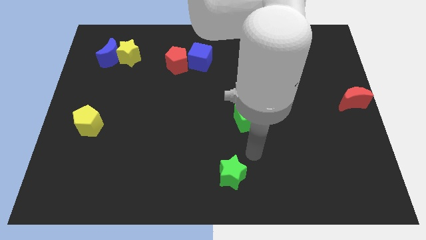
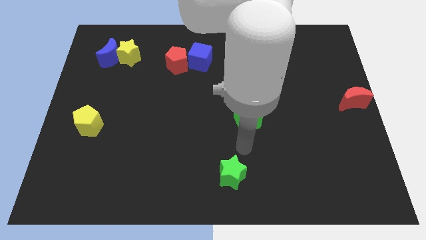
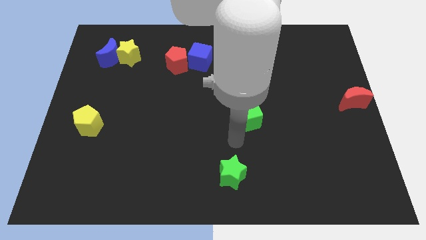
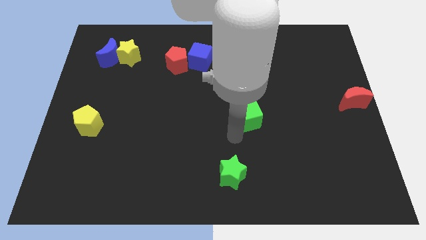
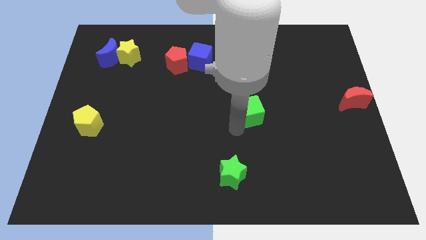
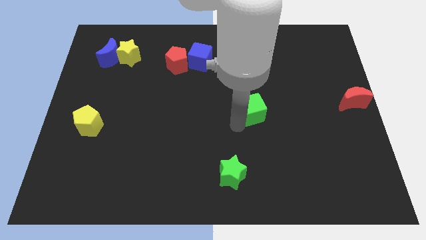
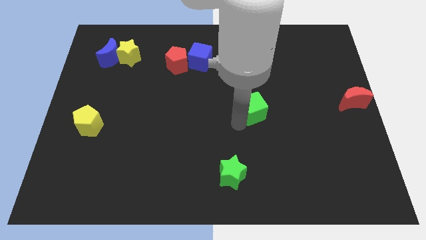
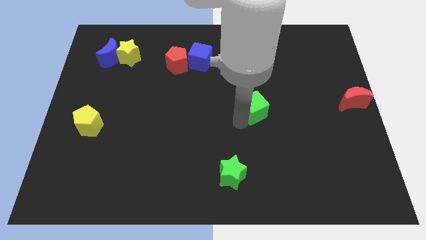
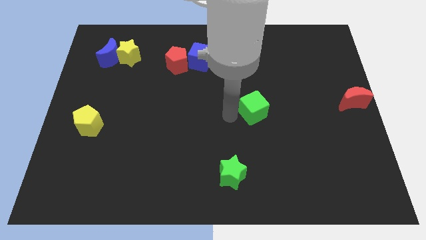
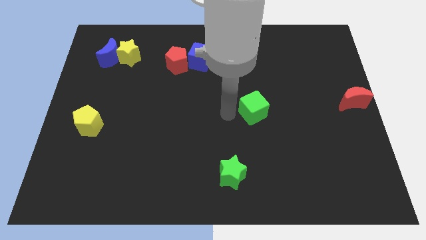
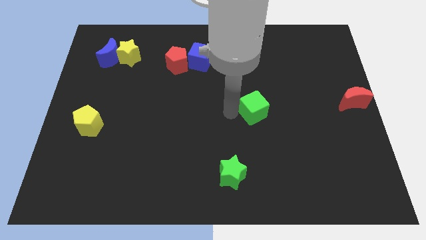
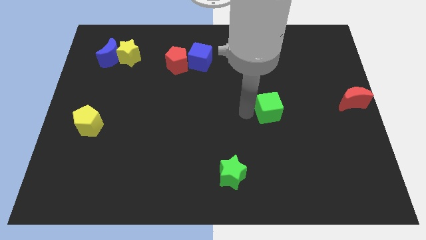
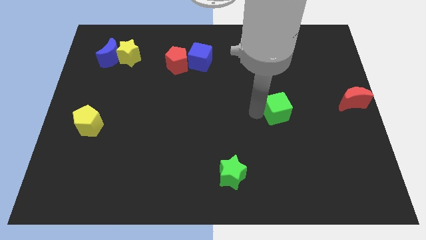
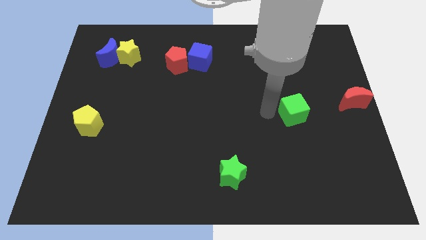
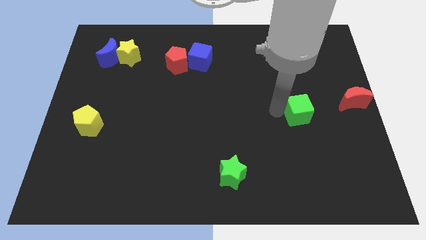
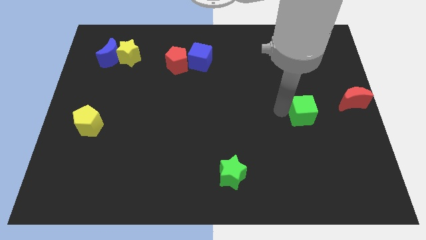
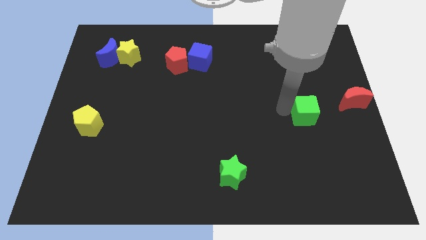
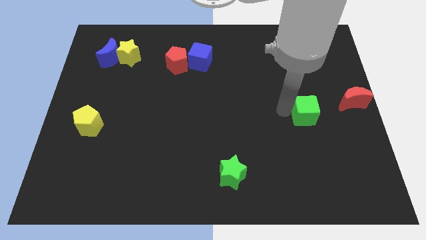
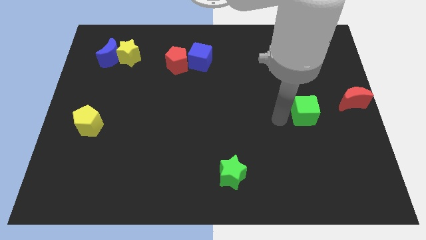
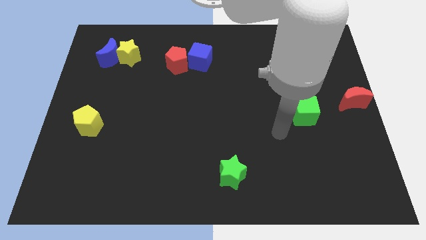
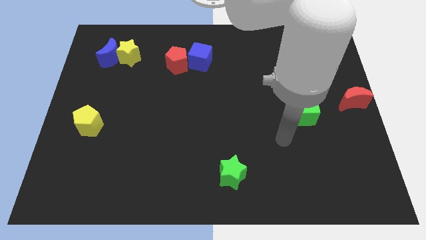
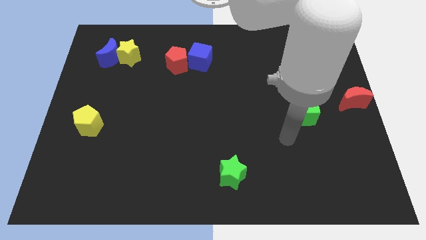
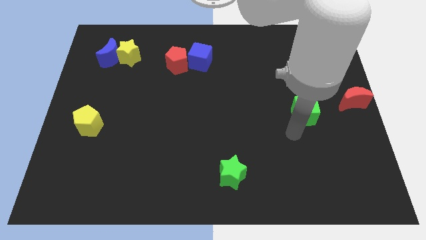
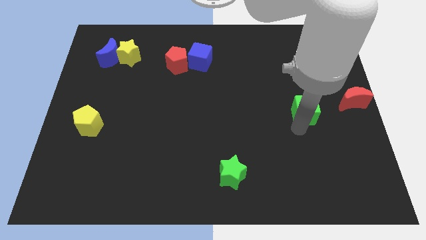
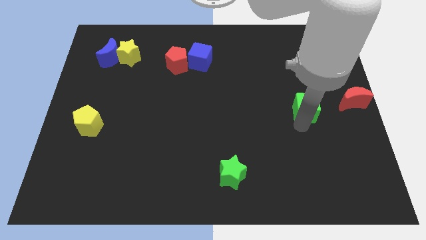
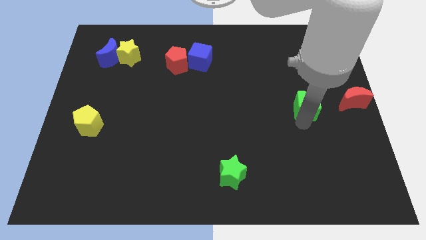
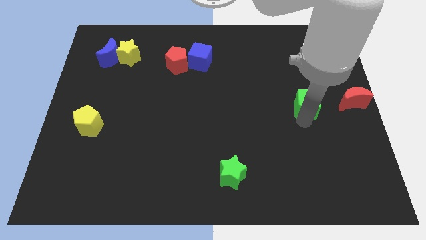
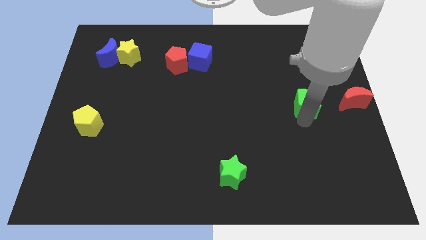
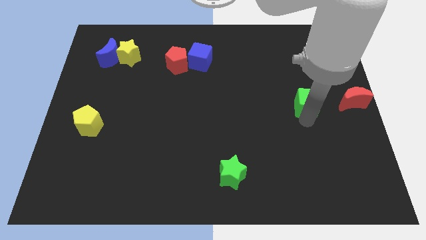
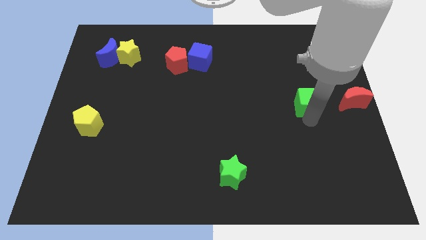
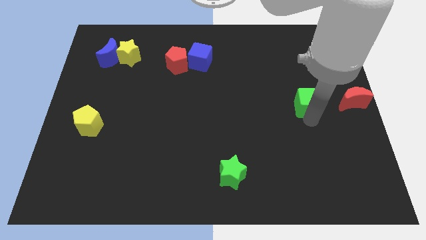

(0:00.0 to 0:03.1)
slide the green cube parallel to red moon

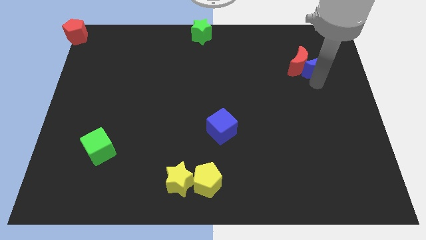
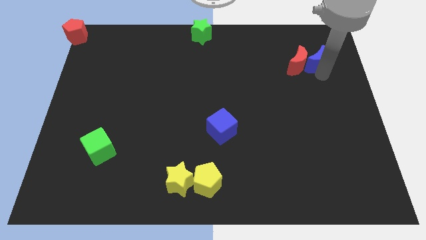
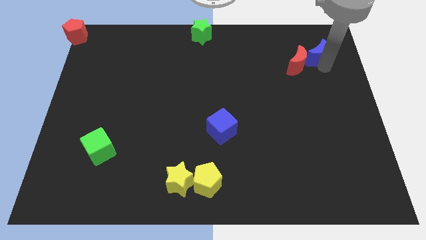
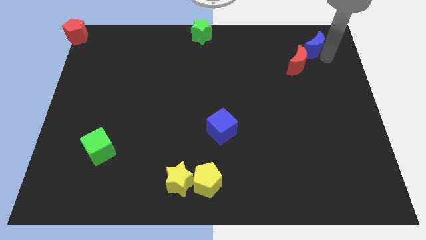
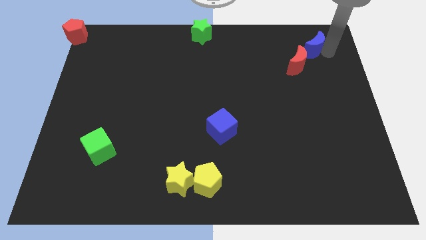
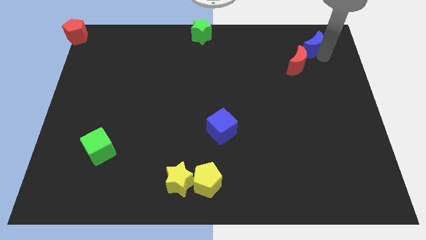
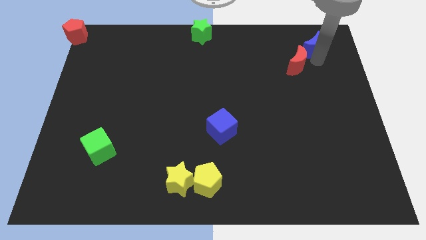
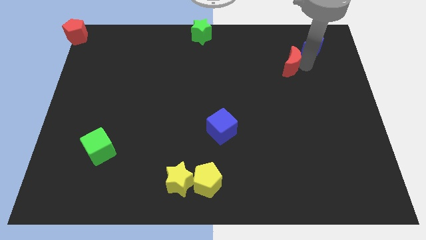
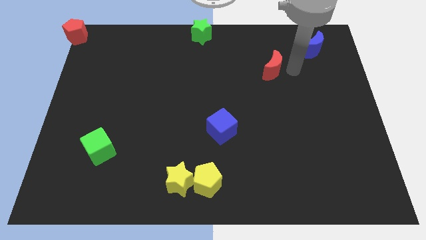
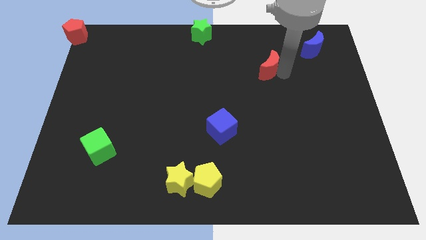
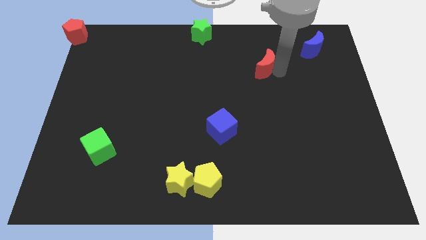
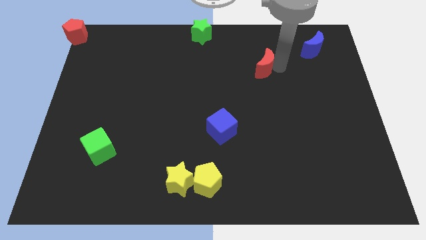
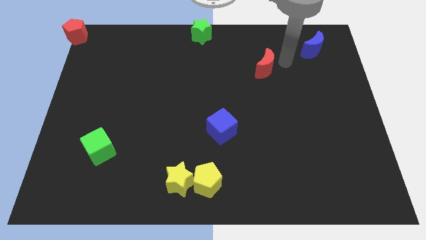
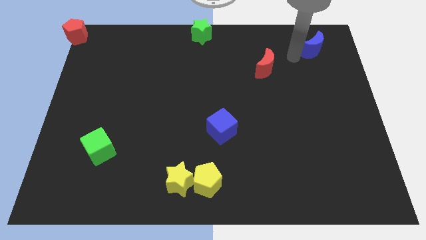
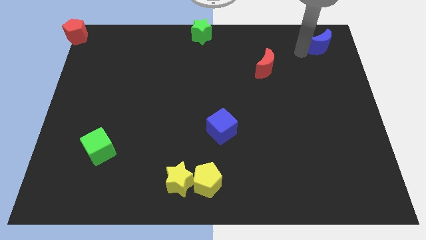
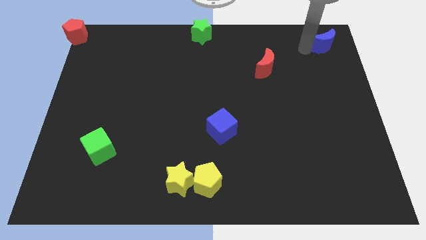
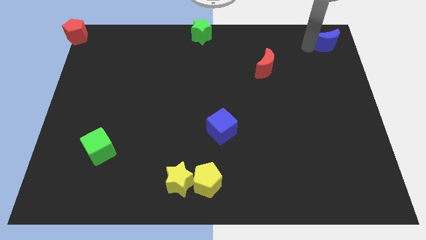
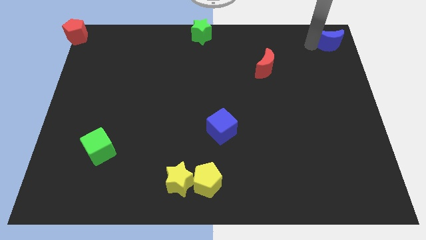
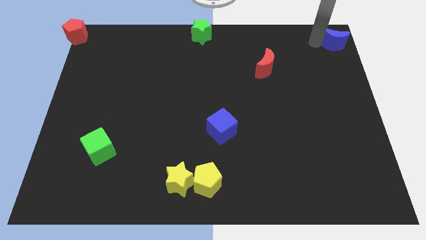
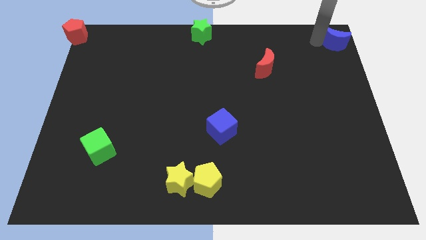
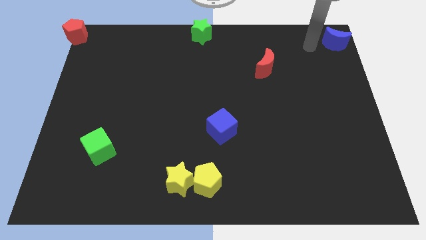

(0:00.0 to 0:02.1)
separate the red and blue moon

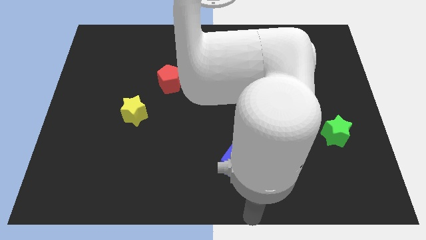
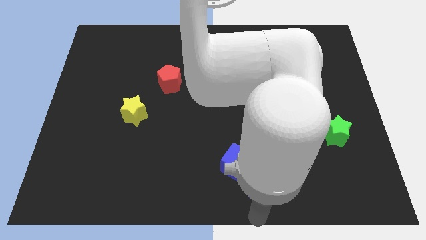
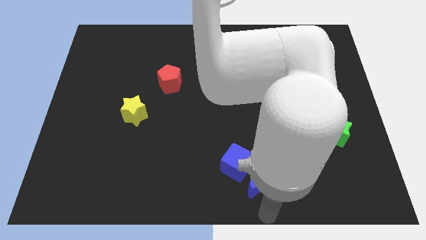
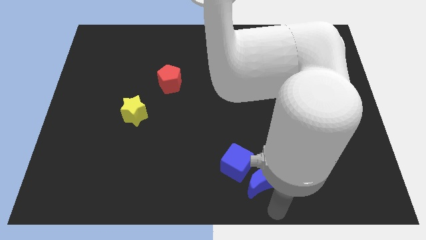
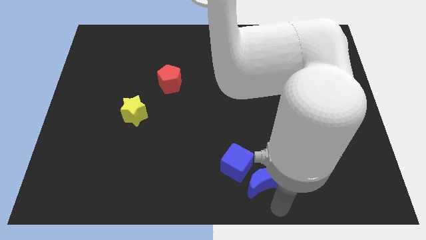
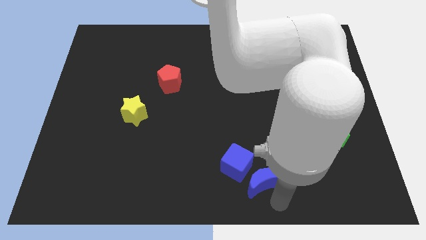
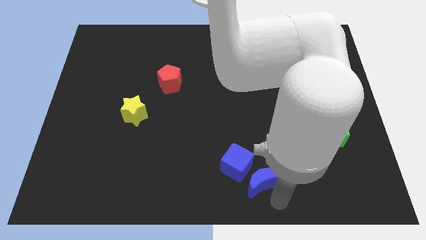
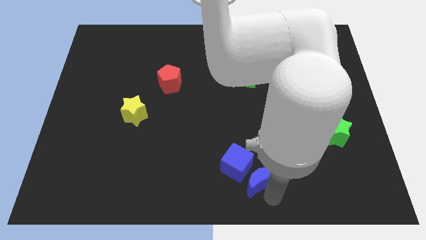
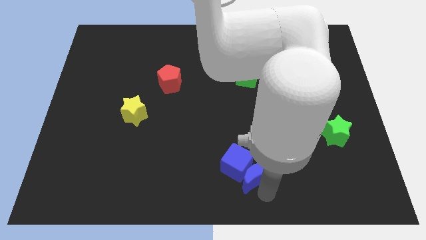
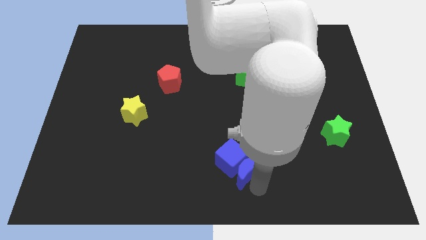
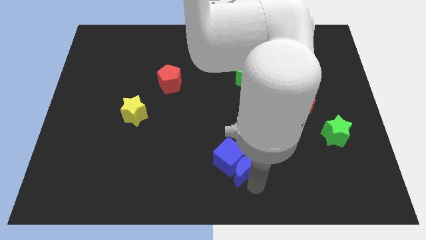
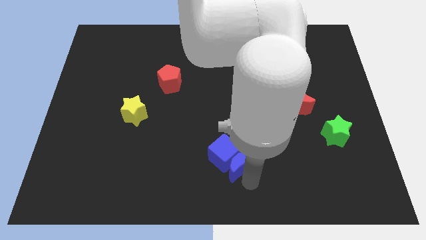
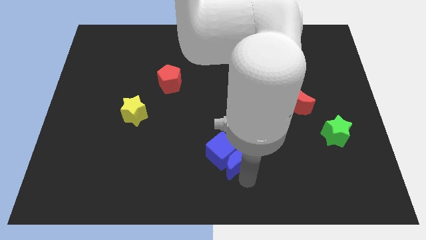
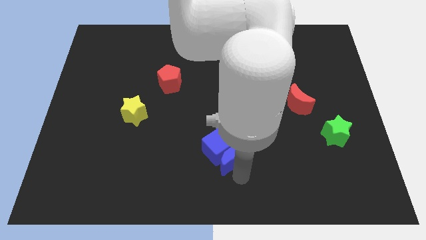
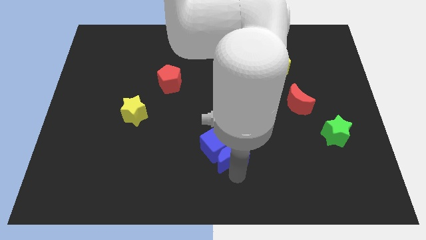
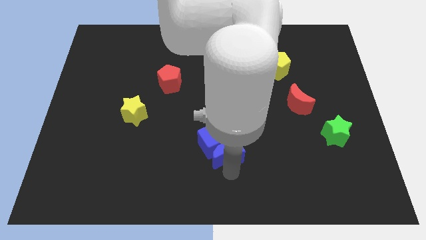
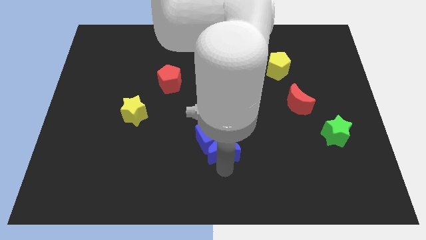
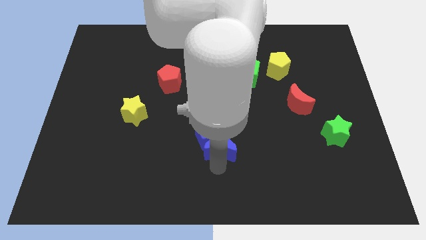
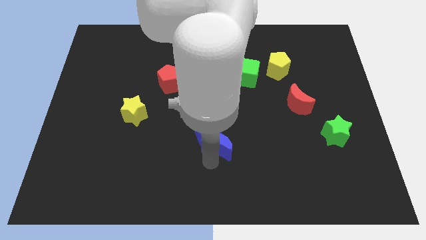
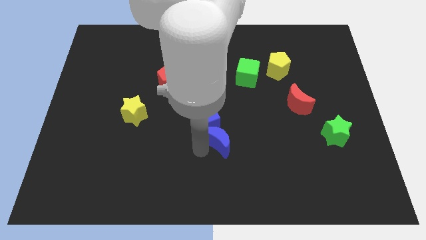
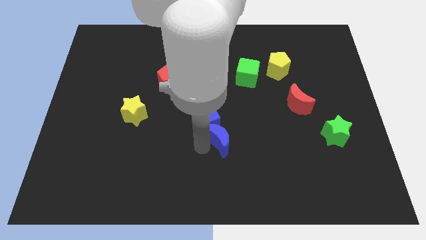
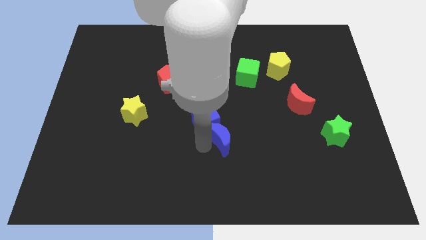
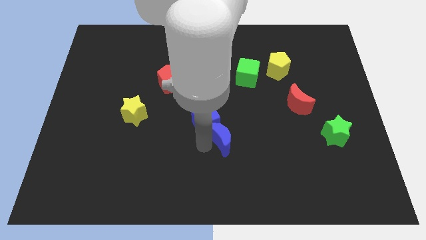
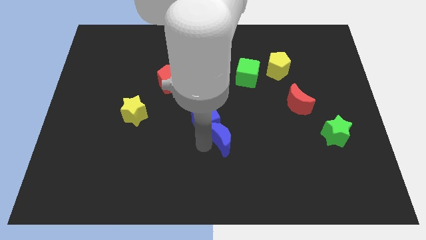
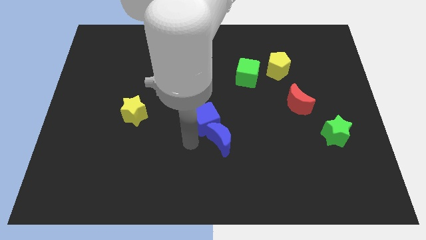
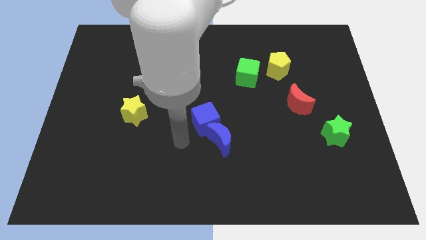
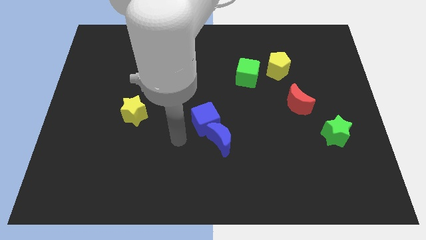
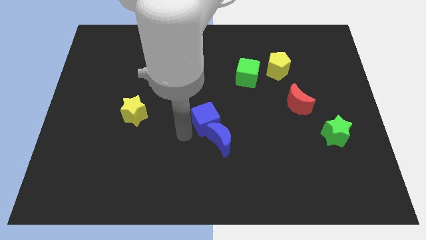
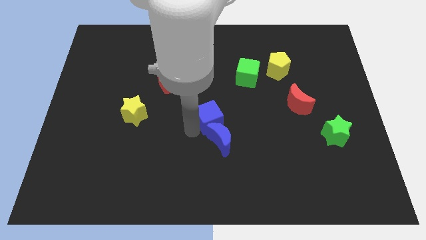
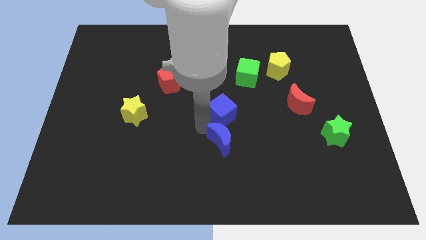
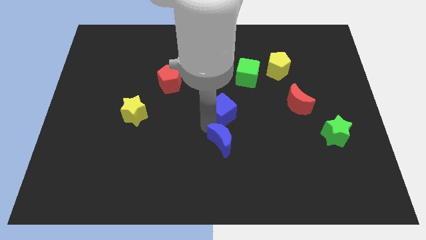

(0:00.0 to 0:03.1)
push blue blocks towards the center

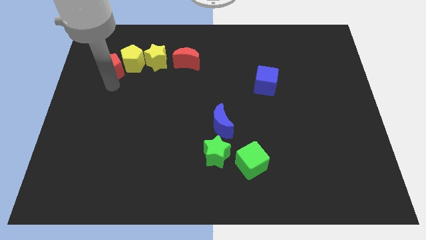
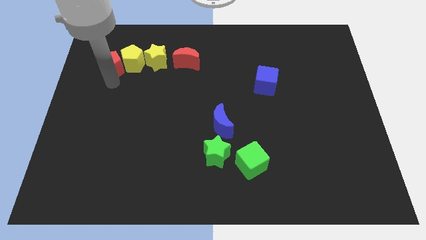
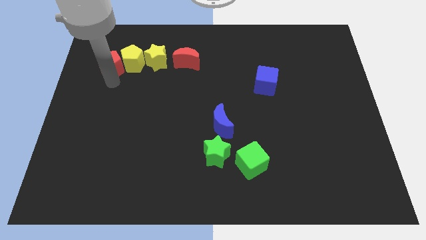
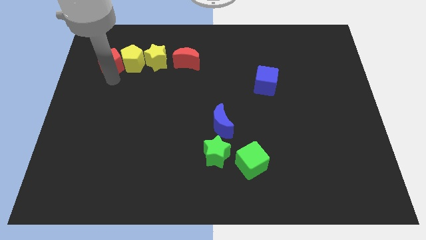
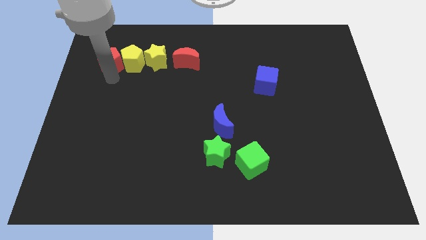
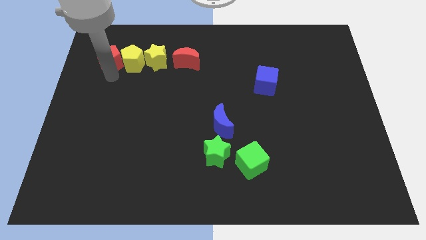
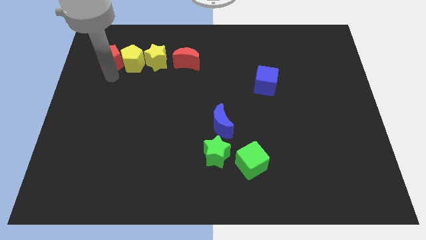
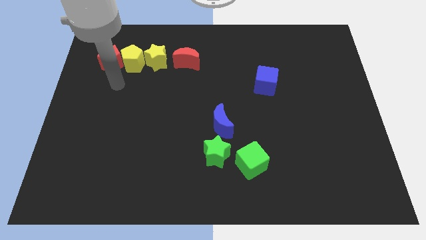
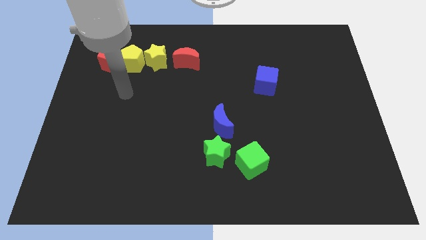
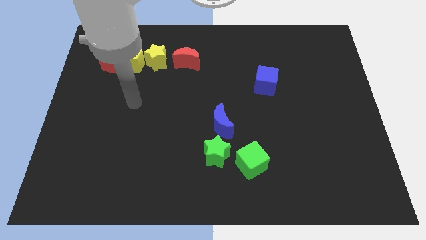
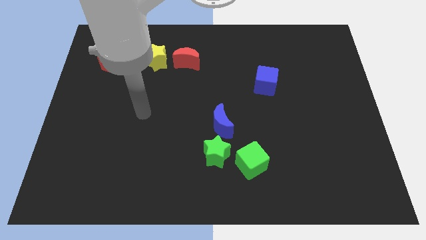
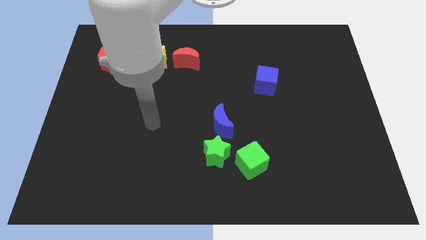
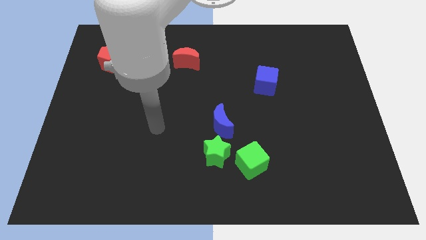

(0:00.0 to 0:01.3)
place the red pentagon left to the yellow pentagon
